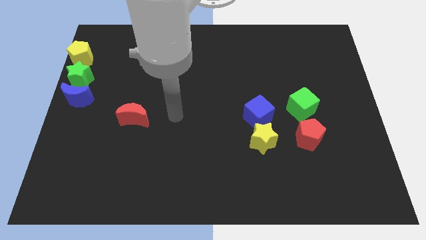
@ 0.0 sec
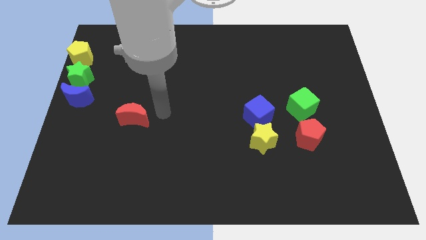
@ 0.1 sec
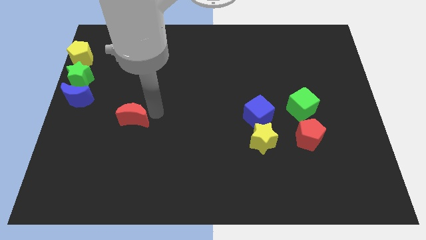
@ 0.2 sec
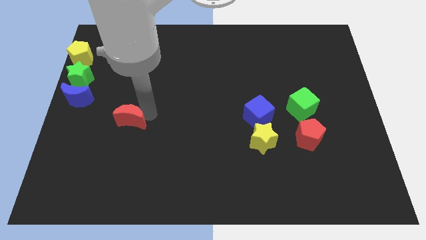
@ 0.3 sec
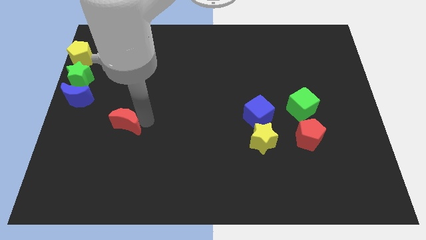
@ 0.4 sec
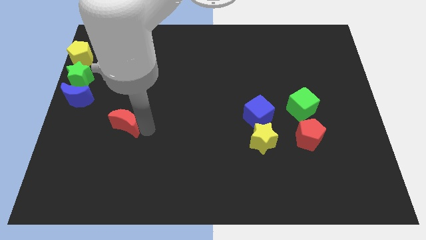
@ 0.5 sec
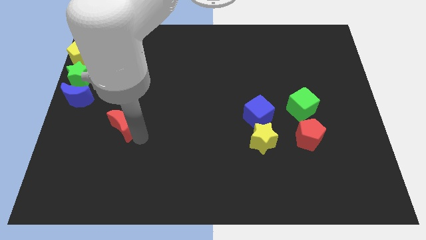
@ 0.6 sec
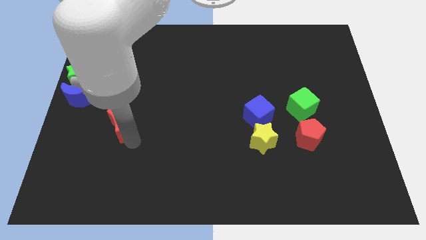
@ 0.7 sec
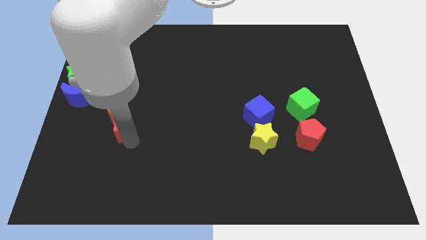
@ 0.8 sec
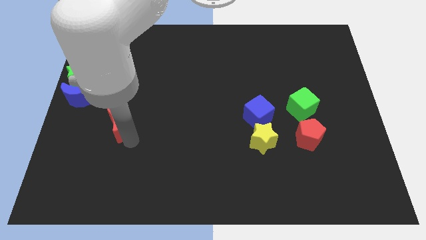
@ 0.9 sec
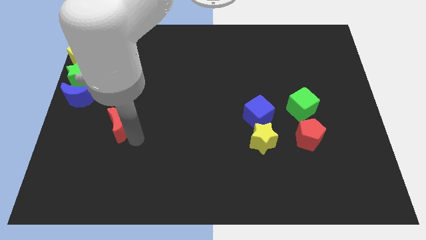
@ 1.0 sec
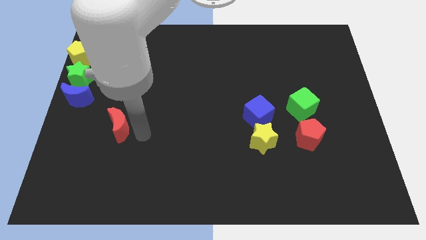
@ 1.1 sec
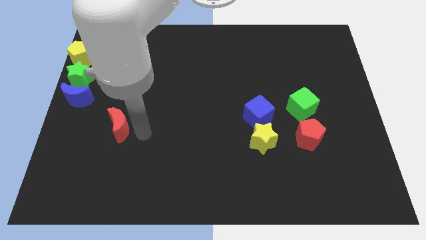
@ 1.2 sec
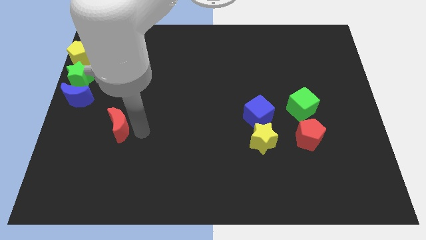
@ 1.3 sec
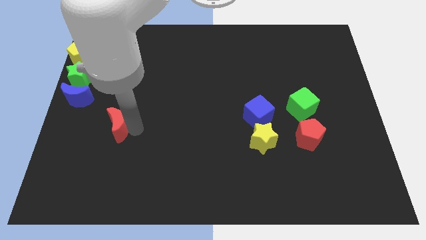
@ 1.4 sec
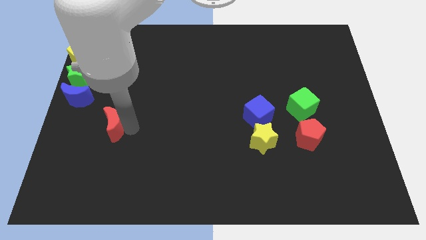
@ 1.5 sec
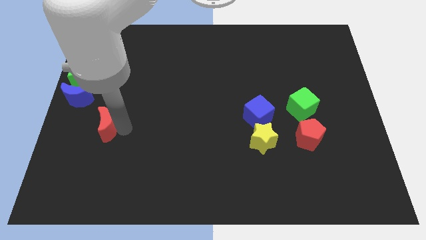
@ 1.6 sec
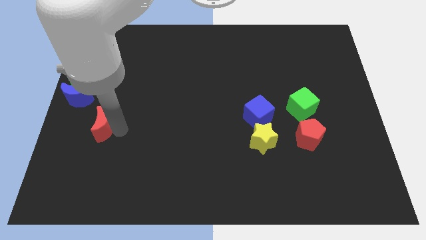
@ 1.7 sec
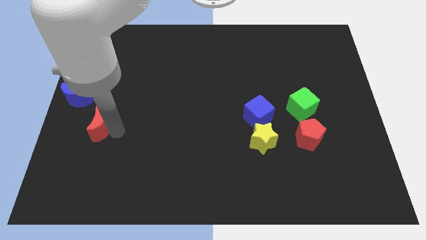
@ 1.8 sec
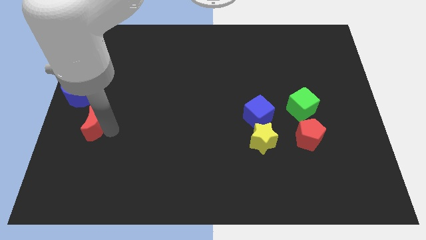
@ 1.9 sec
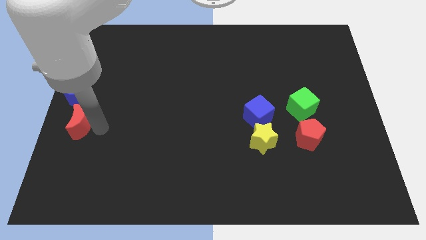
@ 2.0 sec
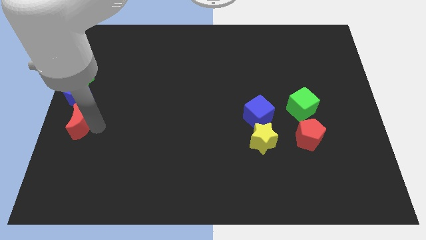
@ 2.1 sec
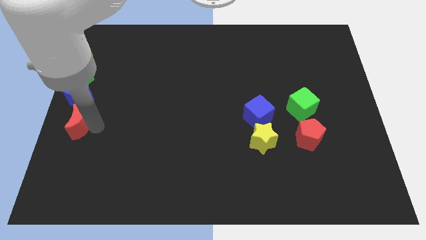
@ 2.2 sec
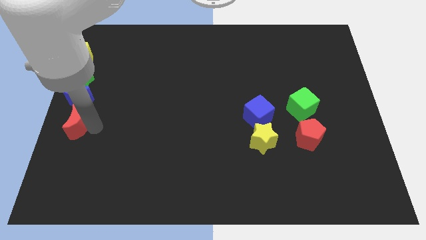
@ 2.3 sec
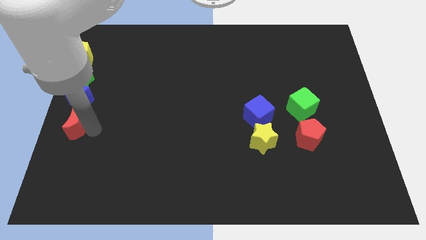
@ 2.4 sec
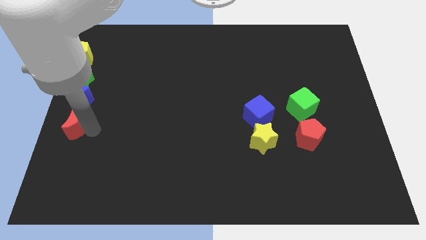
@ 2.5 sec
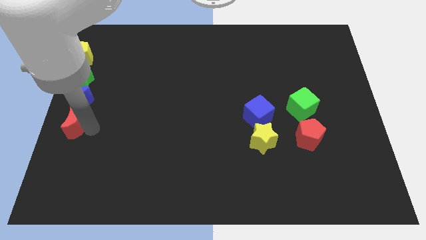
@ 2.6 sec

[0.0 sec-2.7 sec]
place the red crescent below the blue crescent

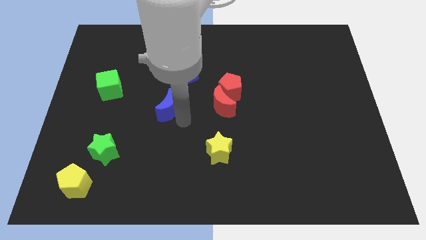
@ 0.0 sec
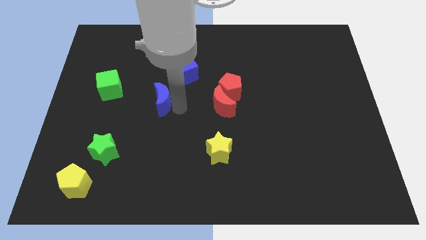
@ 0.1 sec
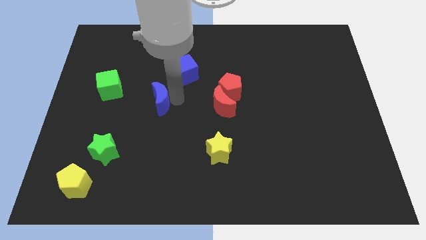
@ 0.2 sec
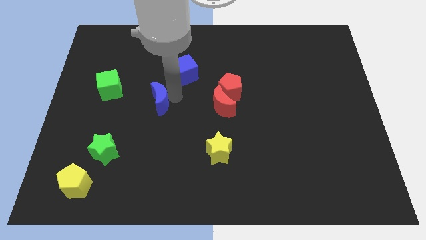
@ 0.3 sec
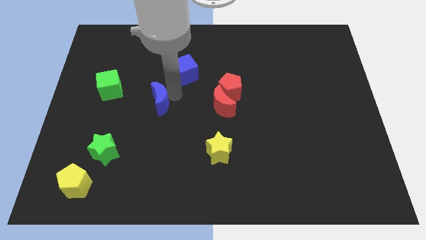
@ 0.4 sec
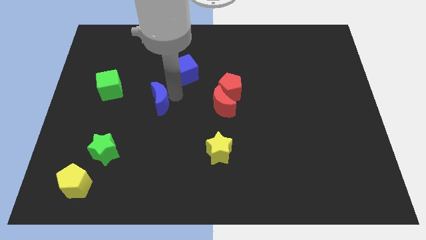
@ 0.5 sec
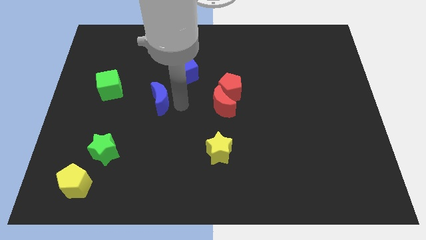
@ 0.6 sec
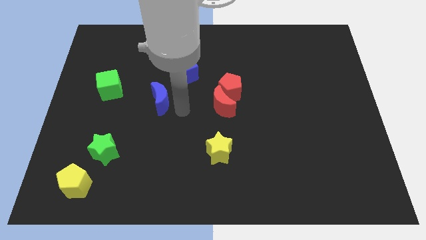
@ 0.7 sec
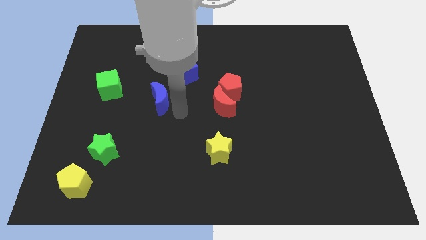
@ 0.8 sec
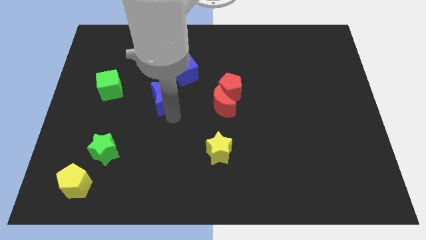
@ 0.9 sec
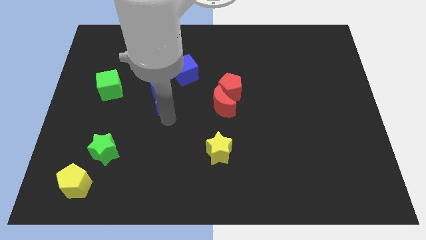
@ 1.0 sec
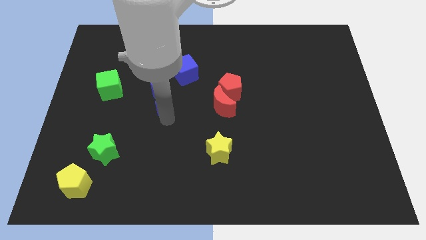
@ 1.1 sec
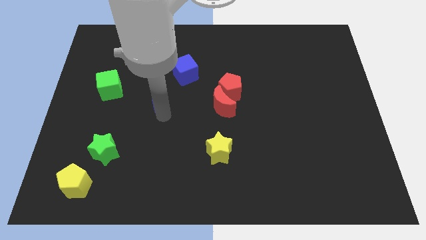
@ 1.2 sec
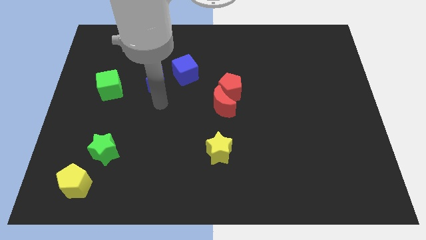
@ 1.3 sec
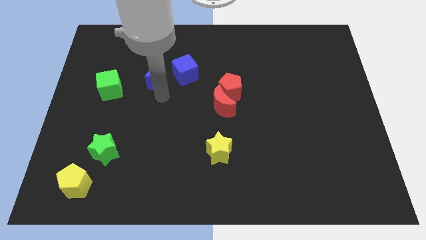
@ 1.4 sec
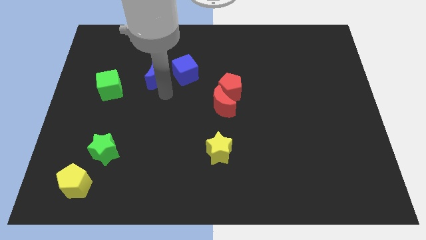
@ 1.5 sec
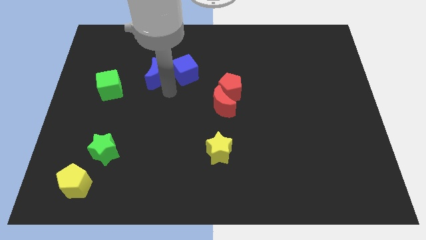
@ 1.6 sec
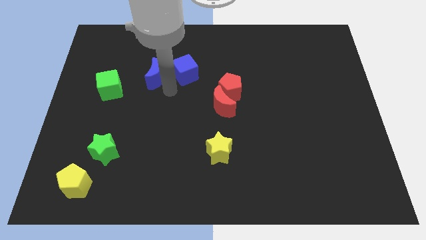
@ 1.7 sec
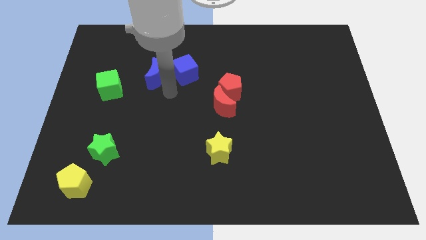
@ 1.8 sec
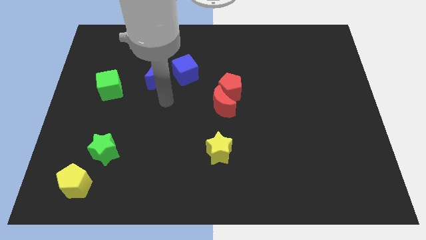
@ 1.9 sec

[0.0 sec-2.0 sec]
move the blue crescent left to the blue cube

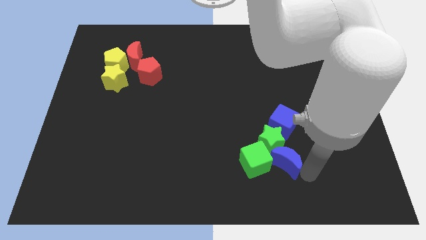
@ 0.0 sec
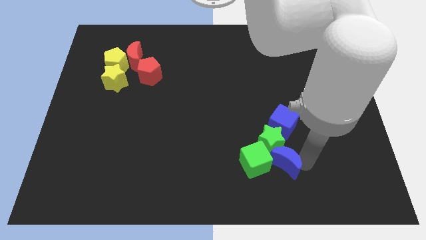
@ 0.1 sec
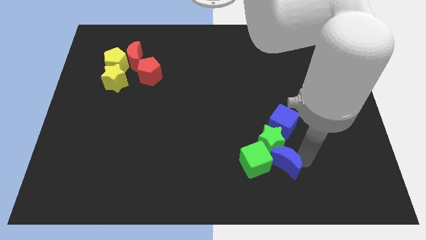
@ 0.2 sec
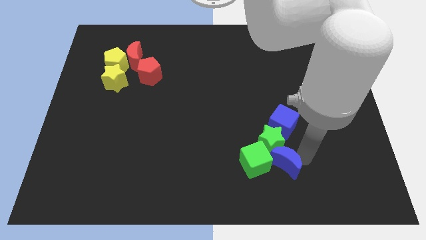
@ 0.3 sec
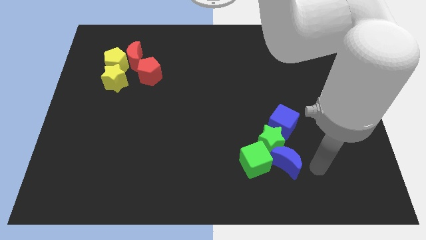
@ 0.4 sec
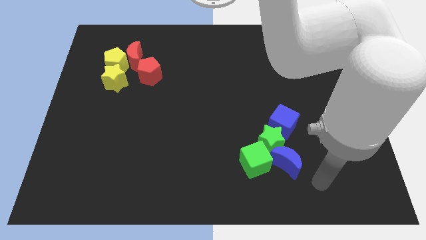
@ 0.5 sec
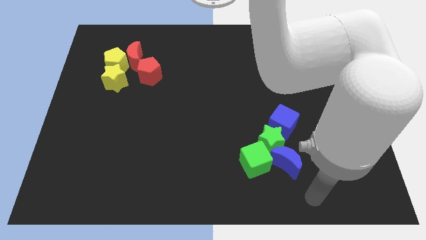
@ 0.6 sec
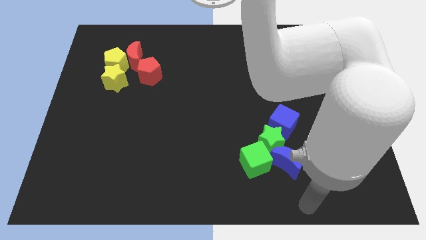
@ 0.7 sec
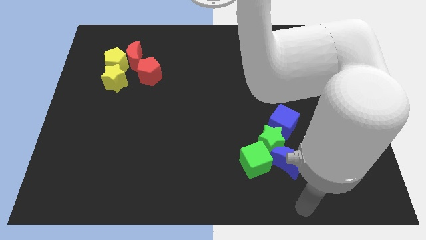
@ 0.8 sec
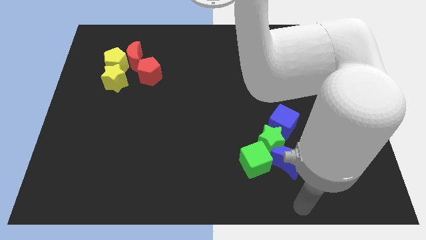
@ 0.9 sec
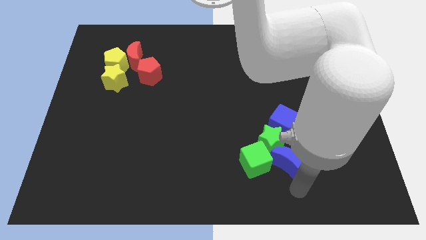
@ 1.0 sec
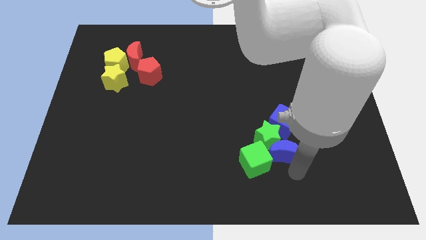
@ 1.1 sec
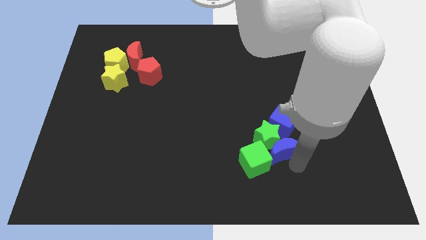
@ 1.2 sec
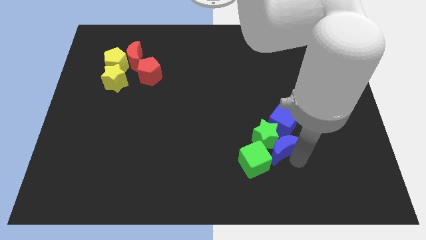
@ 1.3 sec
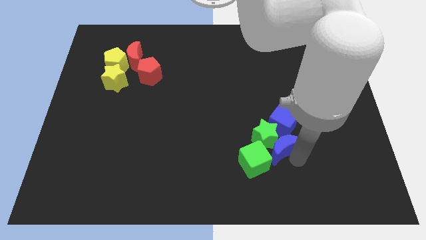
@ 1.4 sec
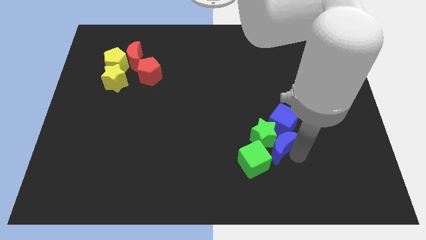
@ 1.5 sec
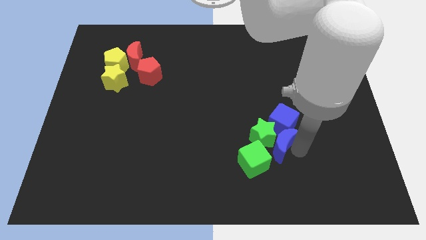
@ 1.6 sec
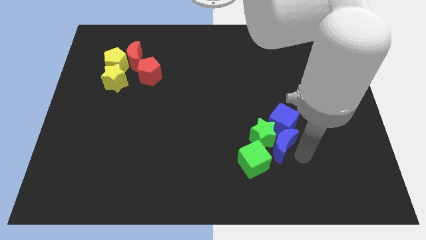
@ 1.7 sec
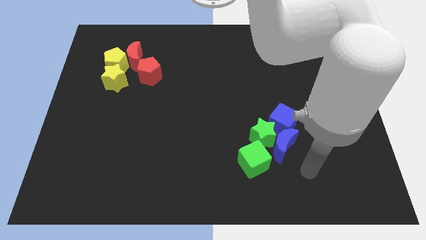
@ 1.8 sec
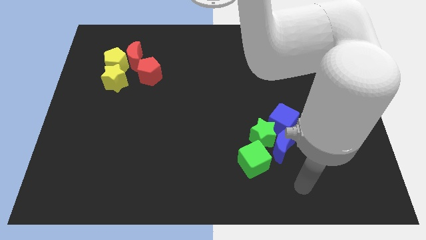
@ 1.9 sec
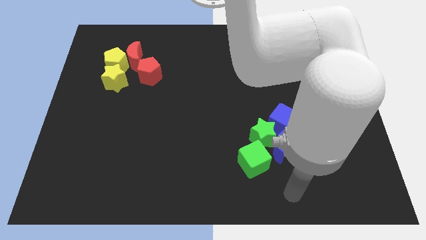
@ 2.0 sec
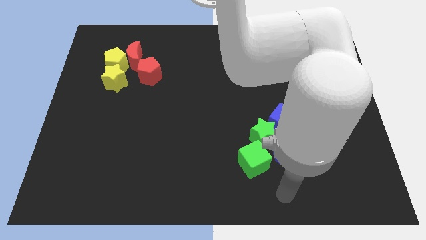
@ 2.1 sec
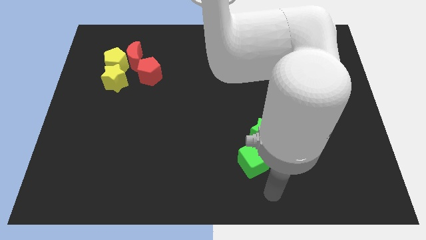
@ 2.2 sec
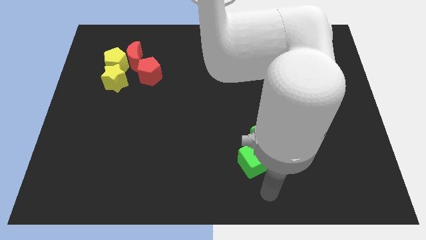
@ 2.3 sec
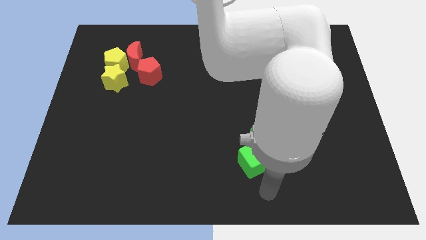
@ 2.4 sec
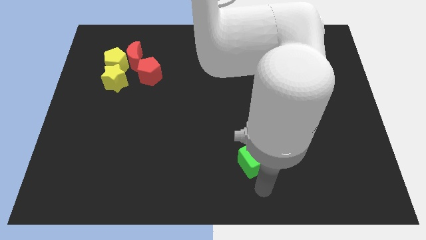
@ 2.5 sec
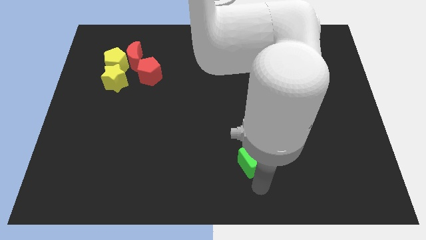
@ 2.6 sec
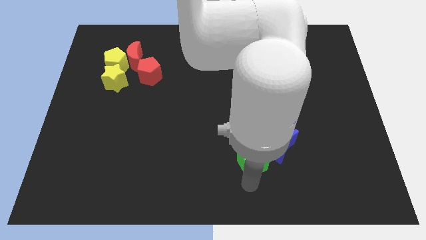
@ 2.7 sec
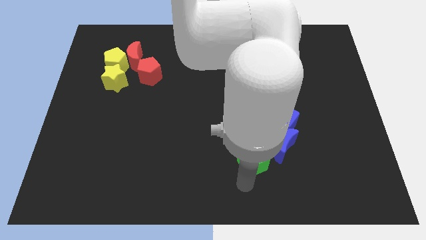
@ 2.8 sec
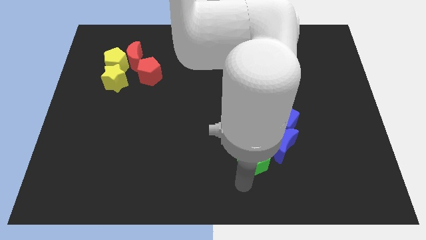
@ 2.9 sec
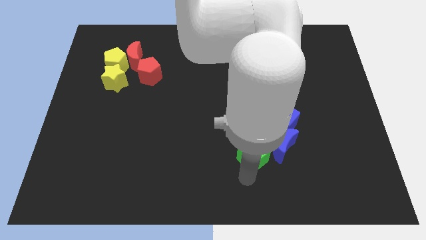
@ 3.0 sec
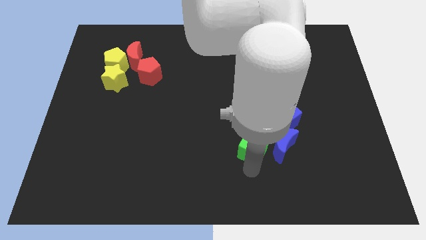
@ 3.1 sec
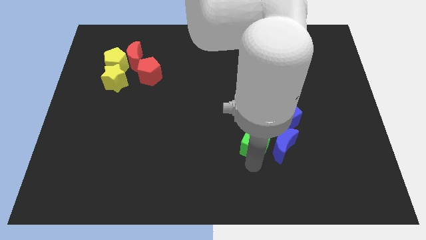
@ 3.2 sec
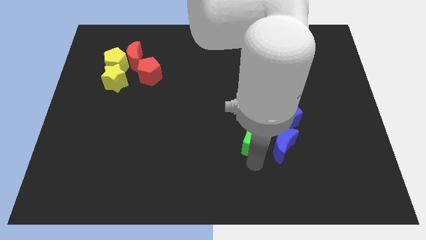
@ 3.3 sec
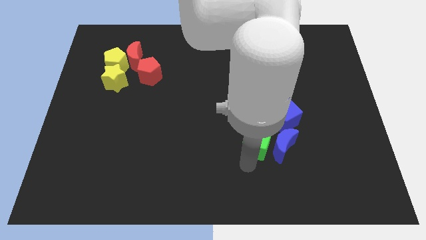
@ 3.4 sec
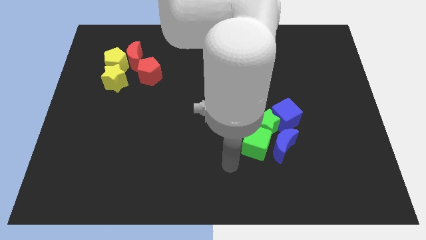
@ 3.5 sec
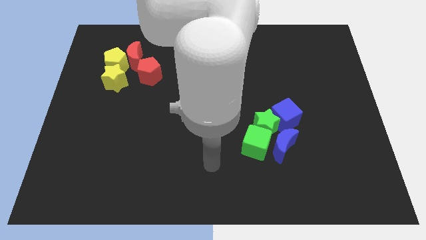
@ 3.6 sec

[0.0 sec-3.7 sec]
slightly push the green cube into groups of objects

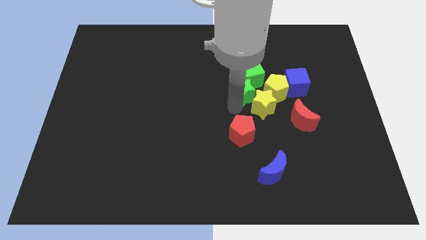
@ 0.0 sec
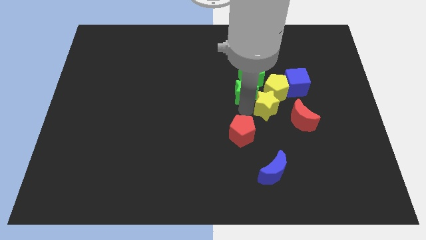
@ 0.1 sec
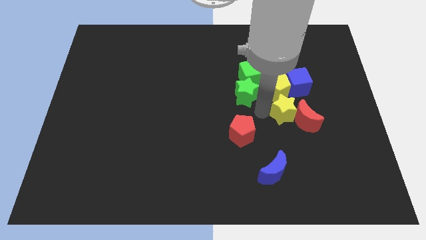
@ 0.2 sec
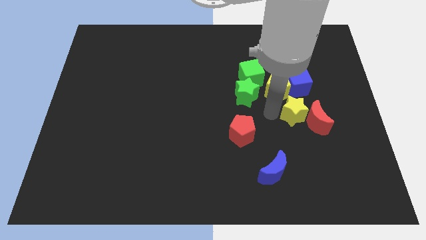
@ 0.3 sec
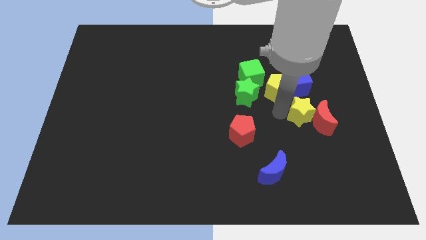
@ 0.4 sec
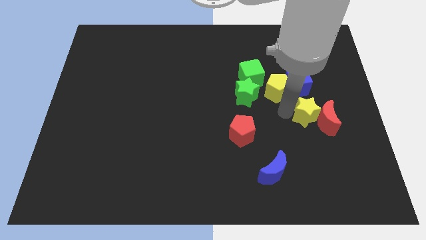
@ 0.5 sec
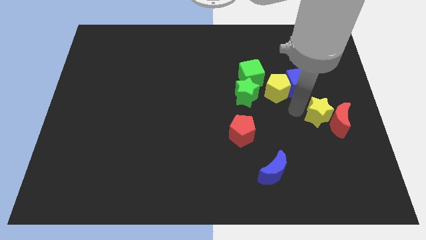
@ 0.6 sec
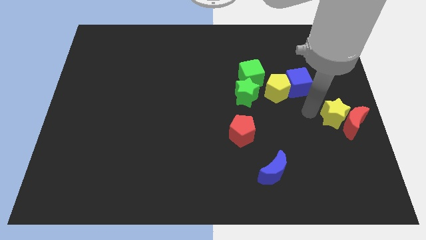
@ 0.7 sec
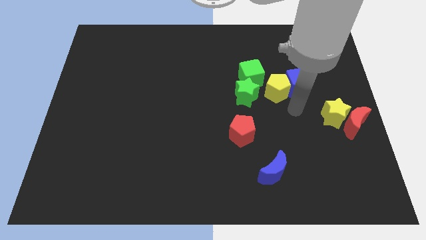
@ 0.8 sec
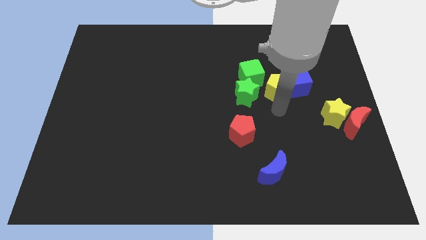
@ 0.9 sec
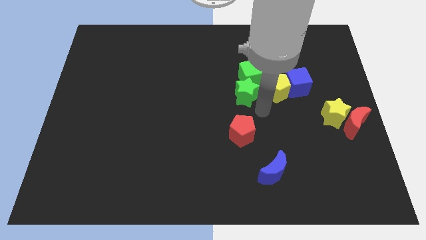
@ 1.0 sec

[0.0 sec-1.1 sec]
separate green star and yellow star
